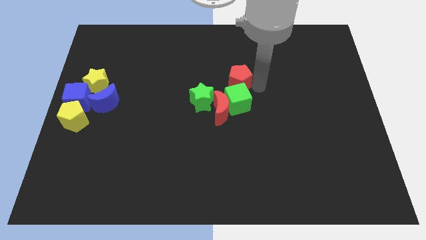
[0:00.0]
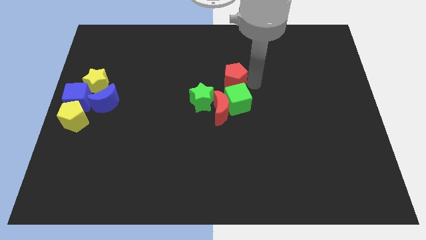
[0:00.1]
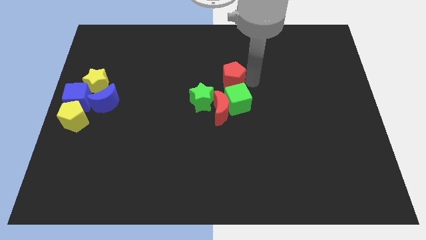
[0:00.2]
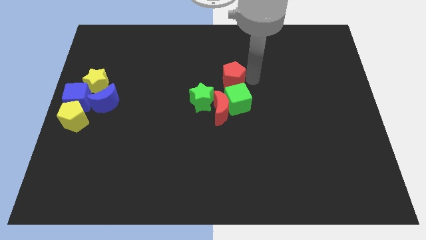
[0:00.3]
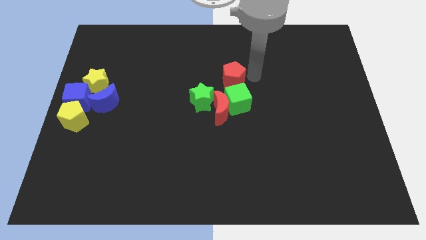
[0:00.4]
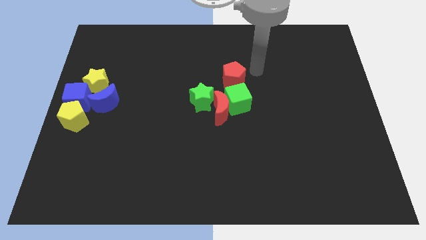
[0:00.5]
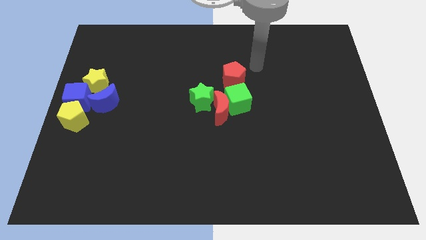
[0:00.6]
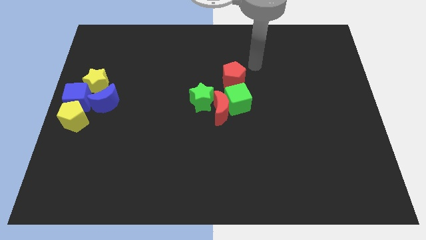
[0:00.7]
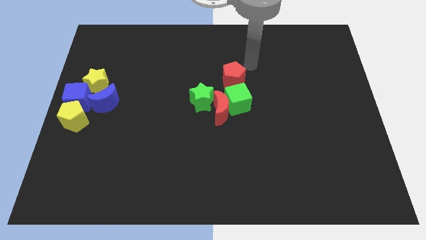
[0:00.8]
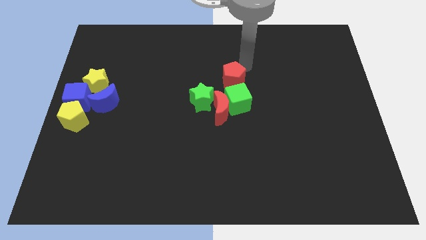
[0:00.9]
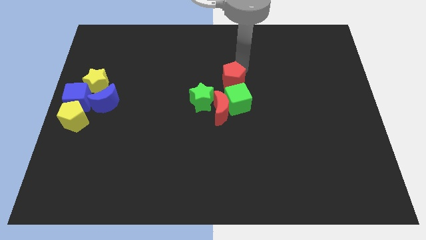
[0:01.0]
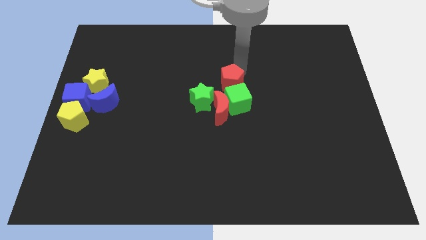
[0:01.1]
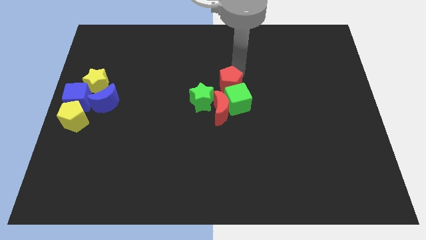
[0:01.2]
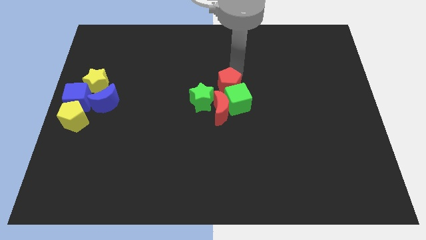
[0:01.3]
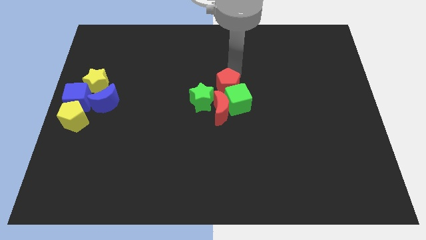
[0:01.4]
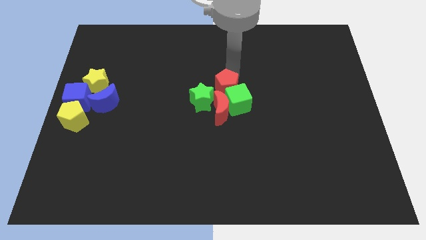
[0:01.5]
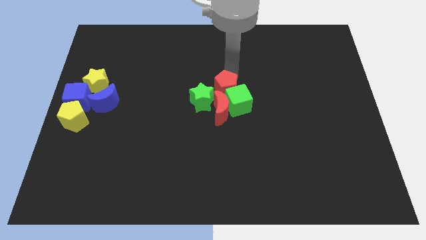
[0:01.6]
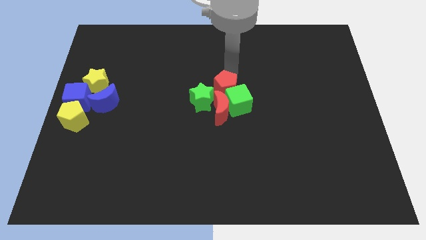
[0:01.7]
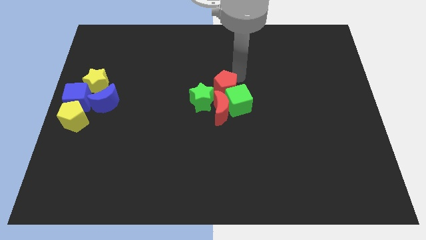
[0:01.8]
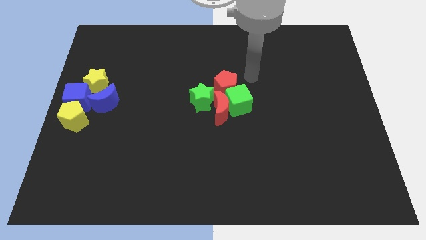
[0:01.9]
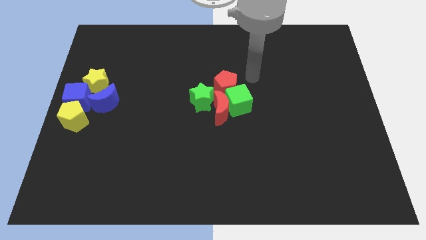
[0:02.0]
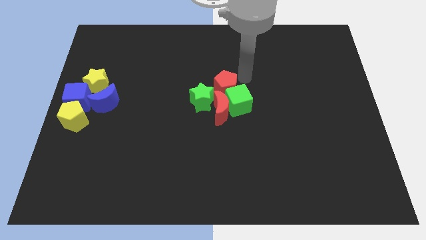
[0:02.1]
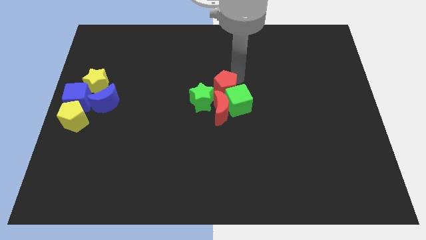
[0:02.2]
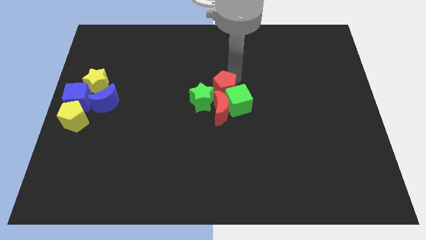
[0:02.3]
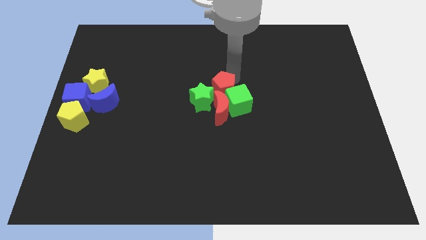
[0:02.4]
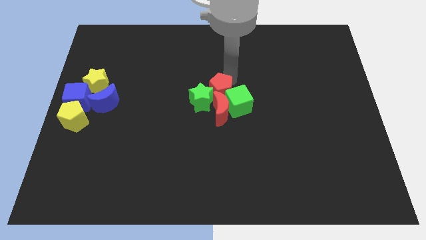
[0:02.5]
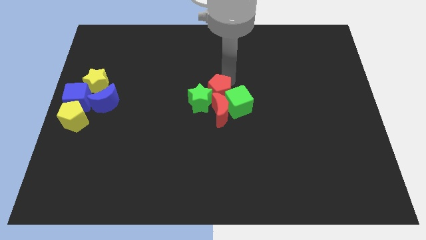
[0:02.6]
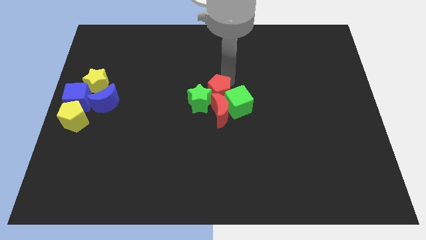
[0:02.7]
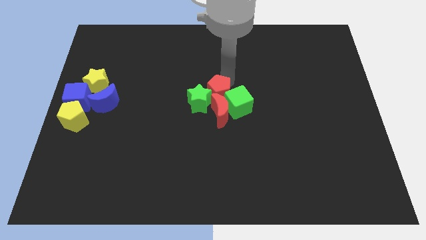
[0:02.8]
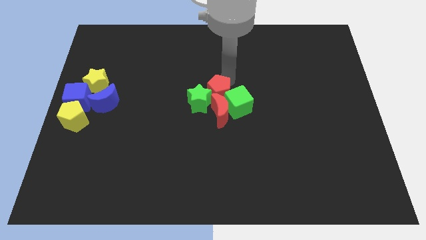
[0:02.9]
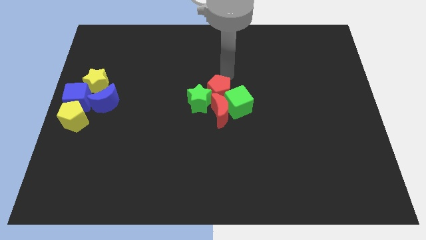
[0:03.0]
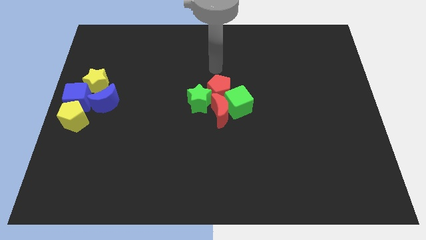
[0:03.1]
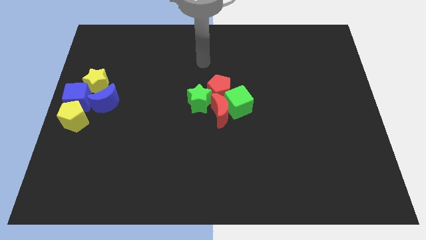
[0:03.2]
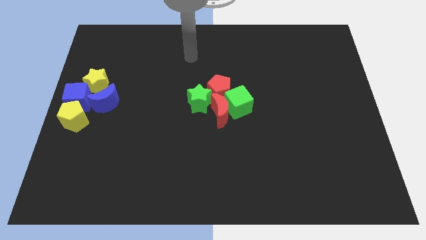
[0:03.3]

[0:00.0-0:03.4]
put the red pentagon at the center of the board

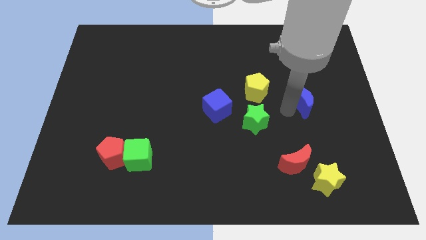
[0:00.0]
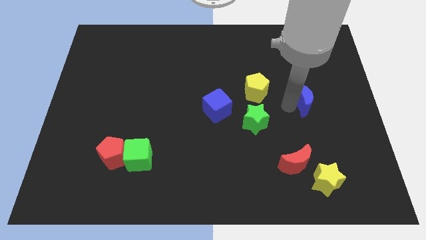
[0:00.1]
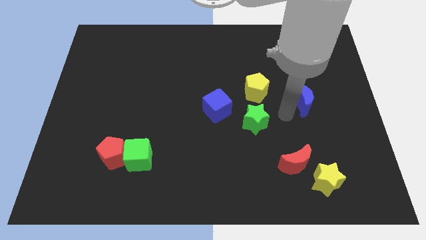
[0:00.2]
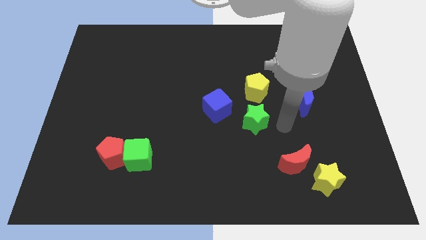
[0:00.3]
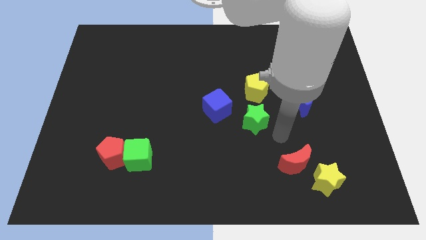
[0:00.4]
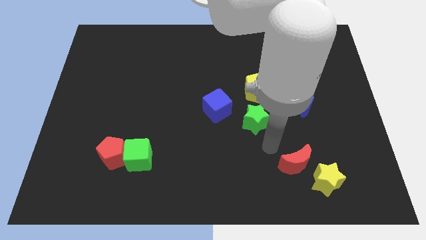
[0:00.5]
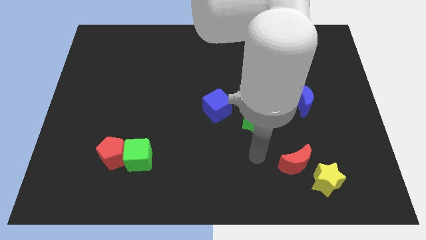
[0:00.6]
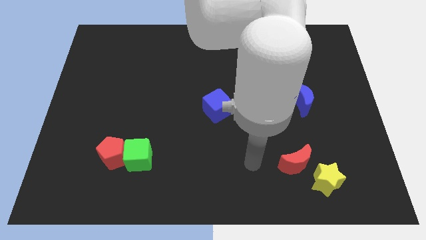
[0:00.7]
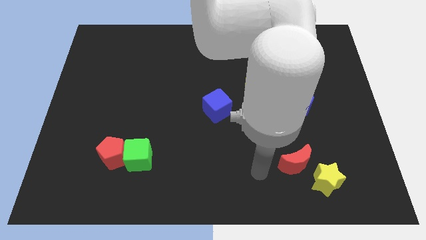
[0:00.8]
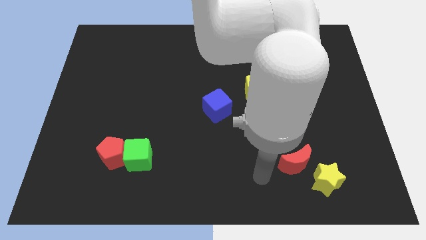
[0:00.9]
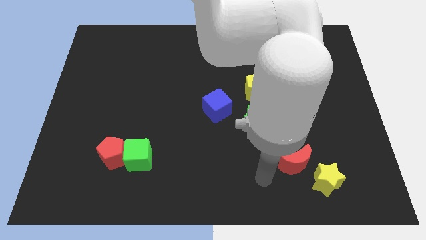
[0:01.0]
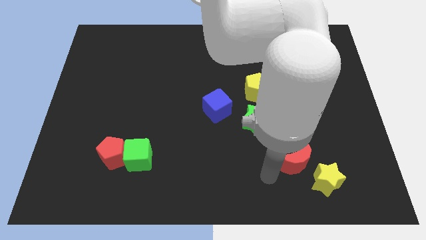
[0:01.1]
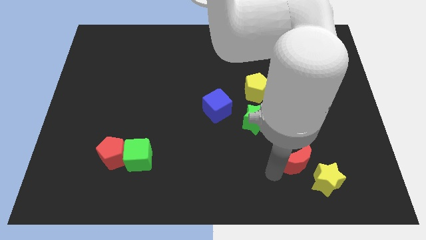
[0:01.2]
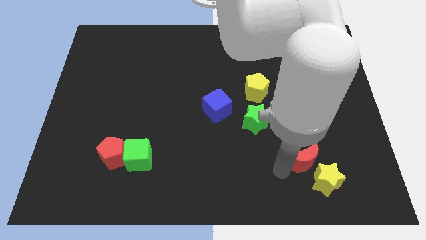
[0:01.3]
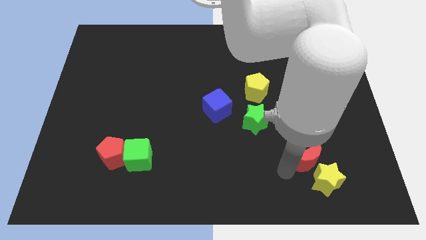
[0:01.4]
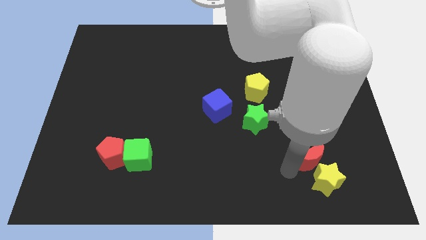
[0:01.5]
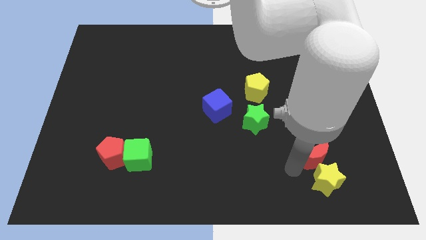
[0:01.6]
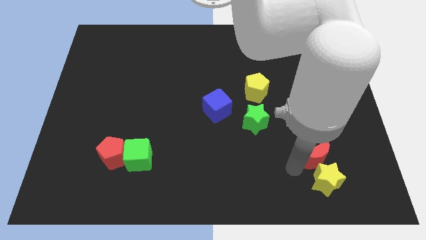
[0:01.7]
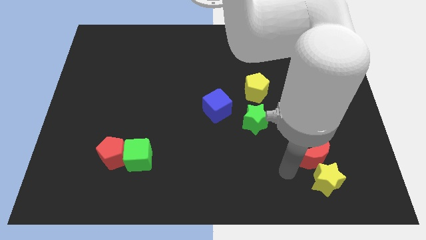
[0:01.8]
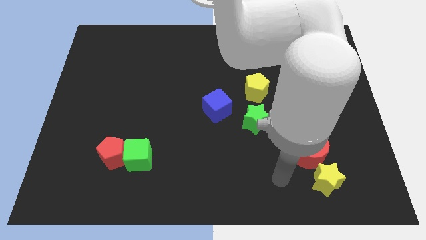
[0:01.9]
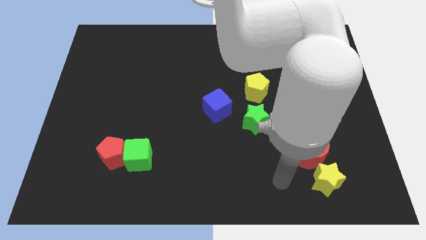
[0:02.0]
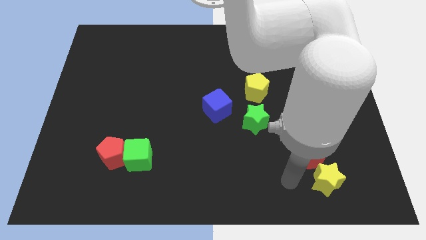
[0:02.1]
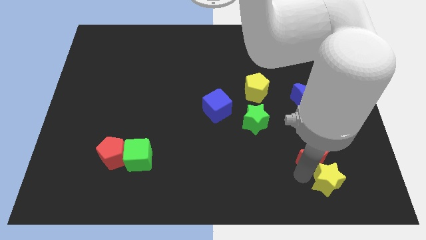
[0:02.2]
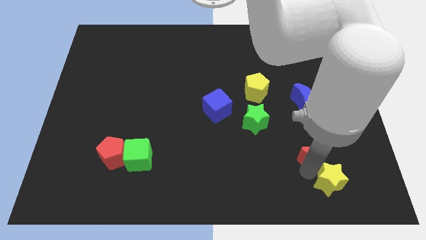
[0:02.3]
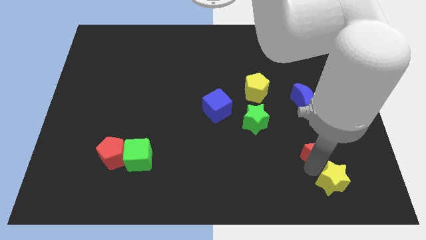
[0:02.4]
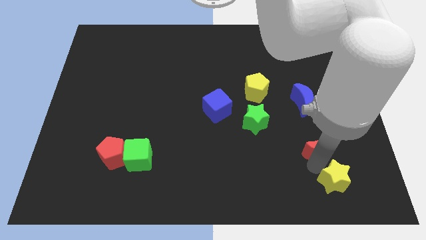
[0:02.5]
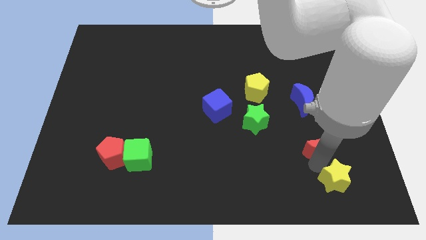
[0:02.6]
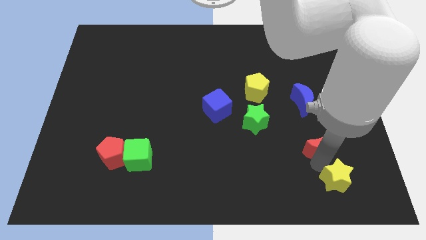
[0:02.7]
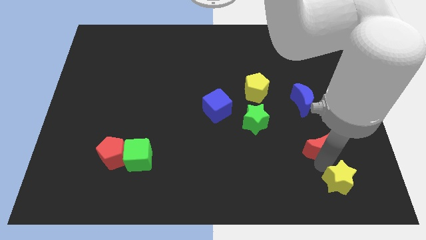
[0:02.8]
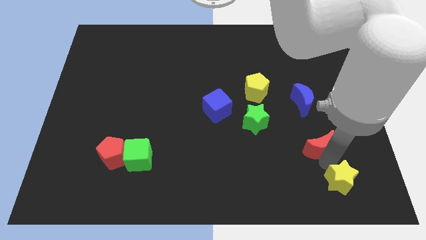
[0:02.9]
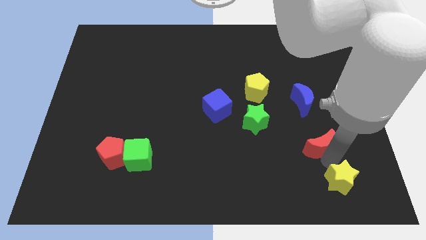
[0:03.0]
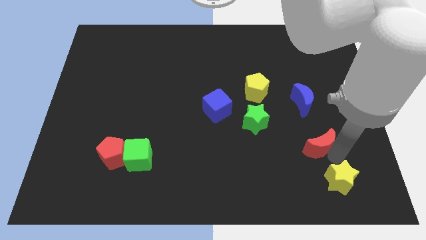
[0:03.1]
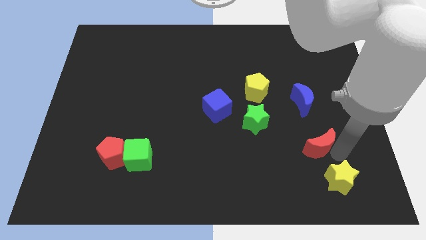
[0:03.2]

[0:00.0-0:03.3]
push the red moon in between yellow star and blue crescent

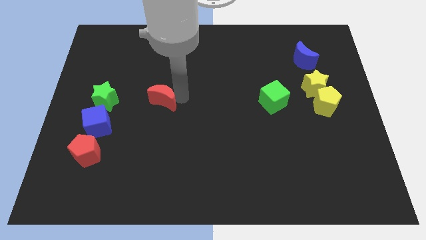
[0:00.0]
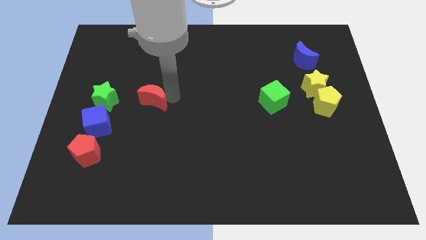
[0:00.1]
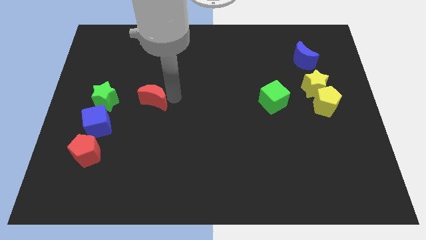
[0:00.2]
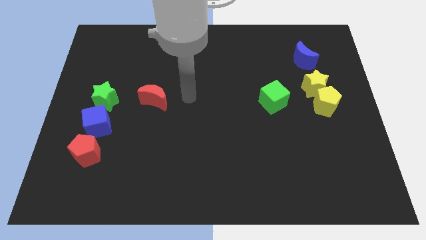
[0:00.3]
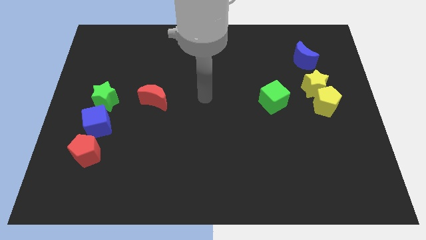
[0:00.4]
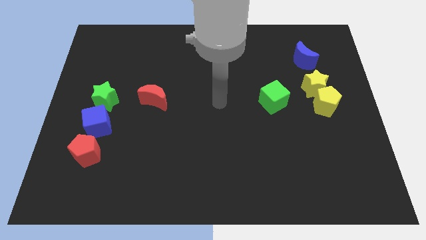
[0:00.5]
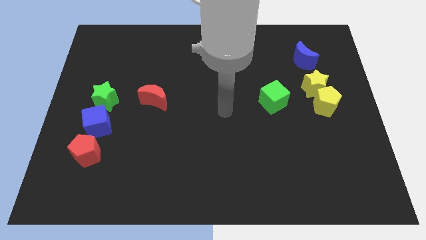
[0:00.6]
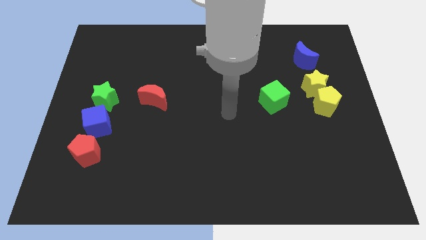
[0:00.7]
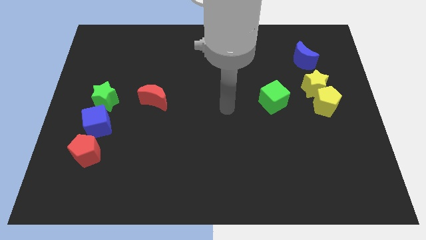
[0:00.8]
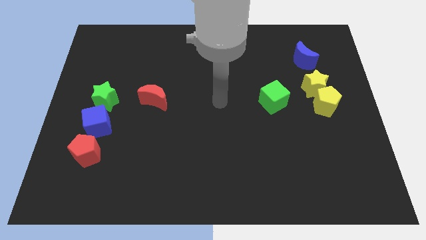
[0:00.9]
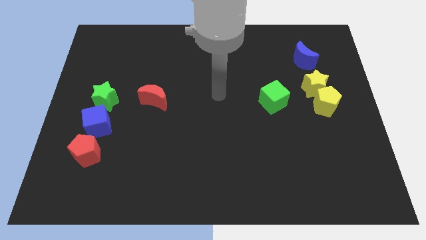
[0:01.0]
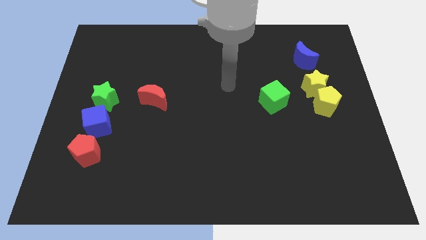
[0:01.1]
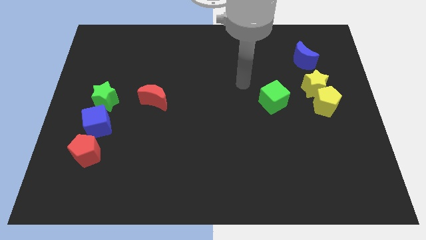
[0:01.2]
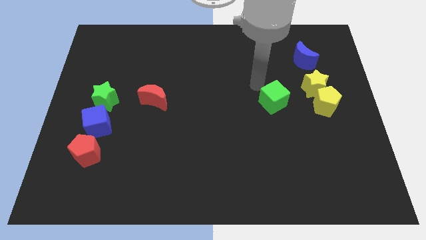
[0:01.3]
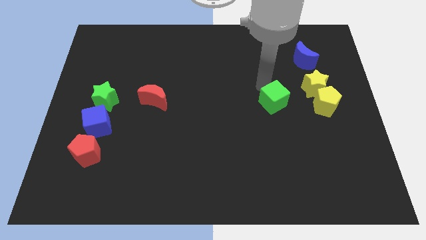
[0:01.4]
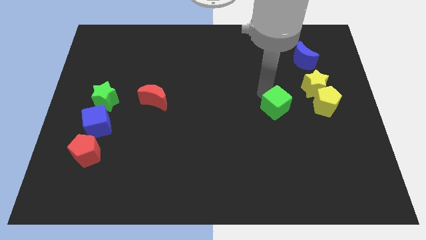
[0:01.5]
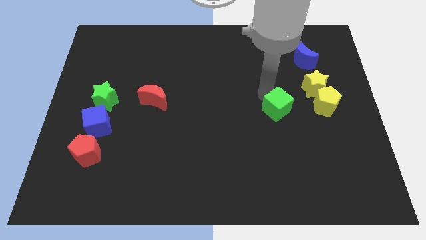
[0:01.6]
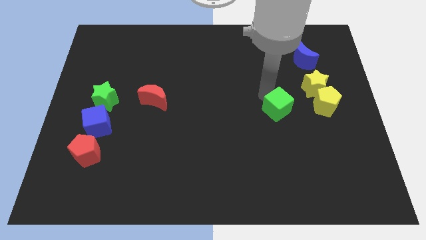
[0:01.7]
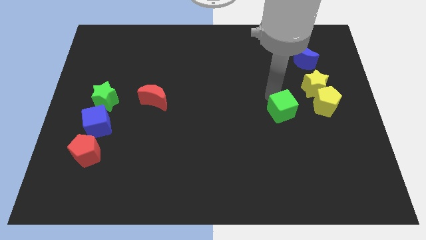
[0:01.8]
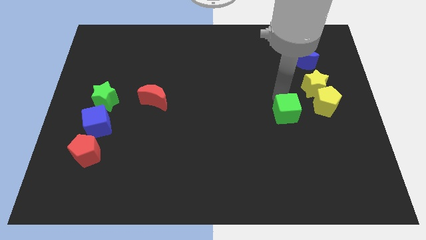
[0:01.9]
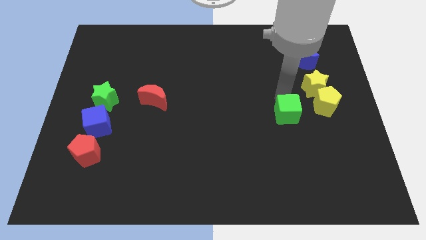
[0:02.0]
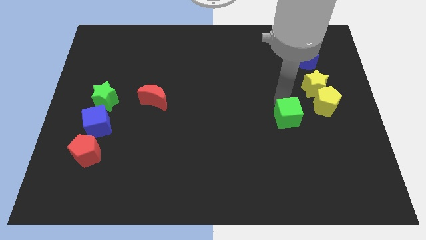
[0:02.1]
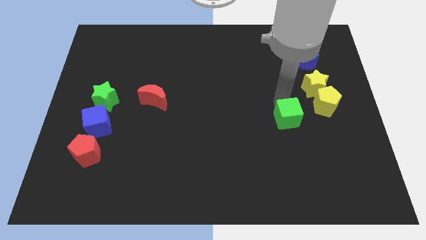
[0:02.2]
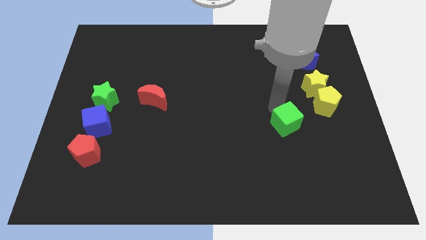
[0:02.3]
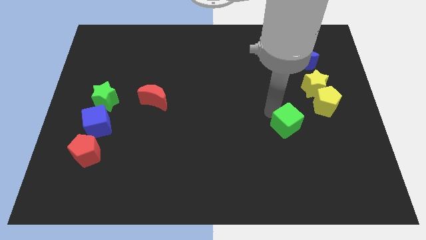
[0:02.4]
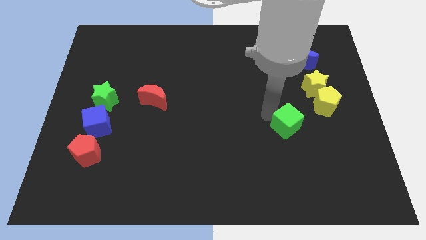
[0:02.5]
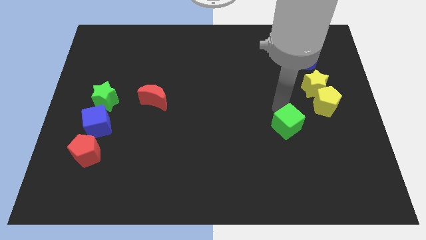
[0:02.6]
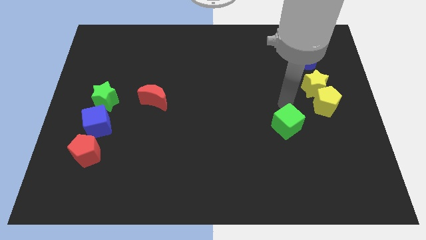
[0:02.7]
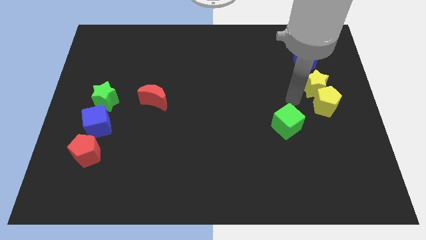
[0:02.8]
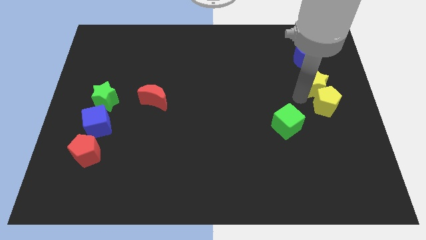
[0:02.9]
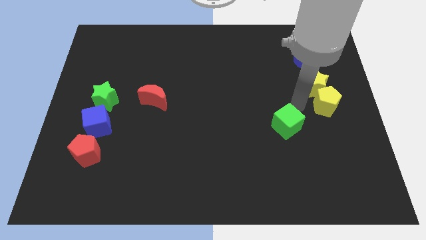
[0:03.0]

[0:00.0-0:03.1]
move the green cube to the bottom left of the yellow pentagon
